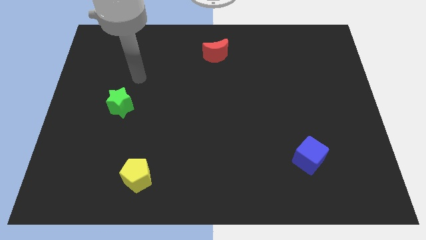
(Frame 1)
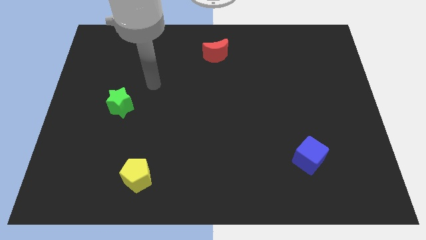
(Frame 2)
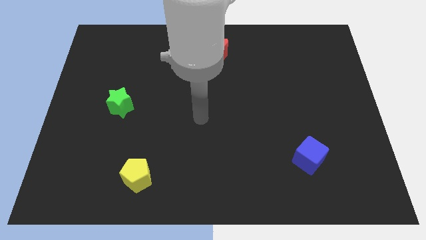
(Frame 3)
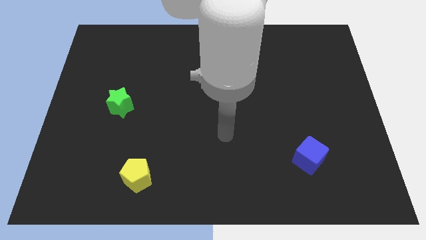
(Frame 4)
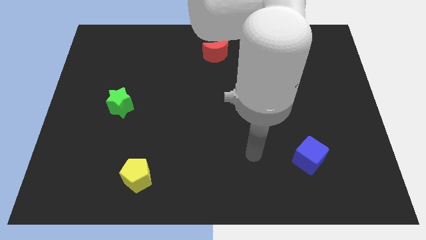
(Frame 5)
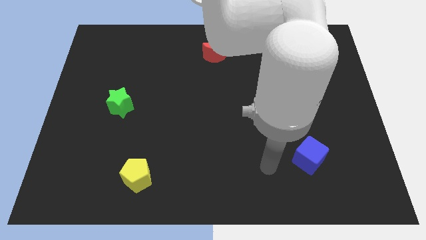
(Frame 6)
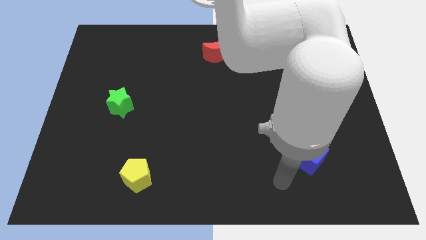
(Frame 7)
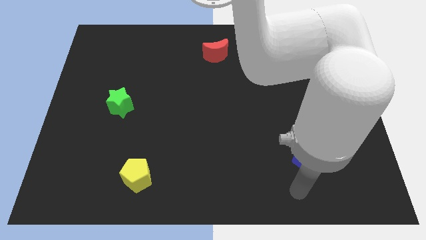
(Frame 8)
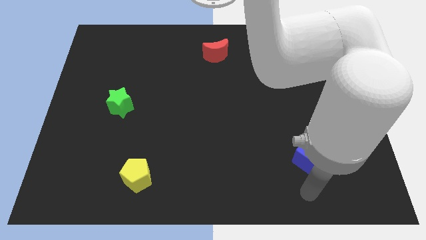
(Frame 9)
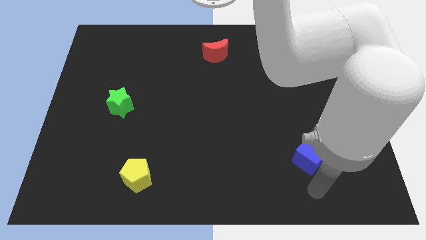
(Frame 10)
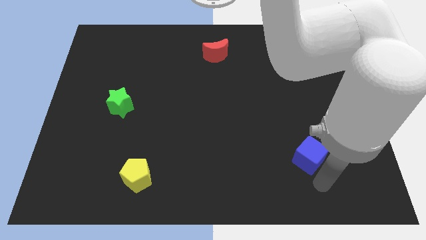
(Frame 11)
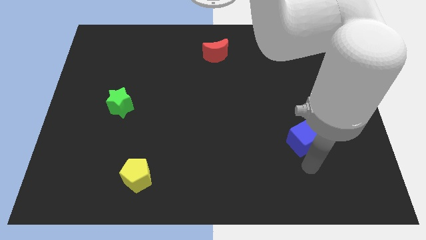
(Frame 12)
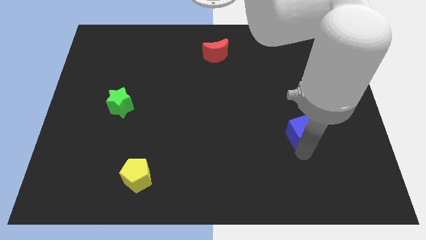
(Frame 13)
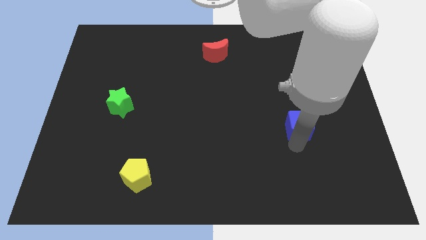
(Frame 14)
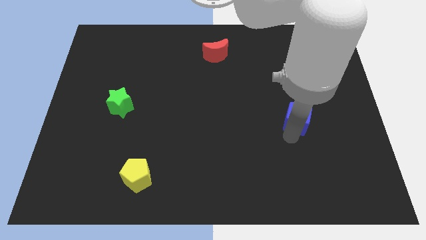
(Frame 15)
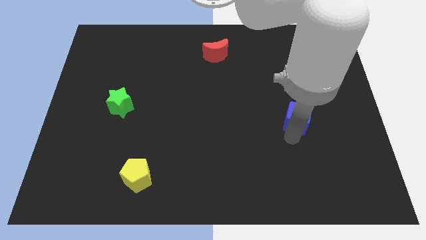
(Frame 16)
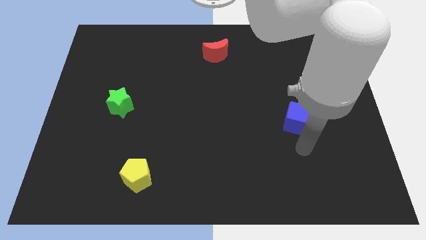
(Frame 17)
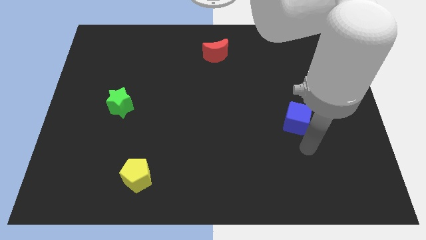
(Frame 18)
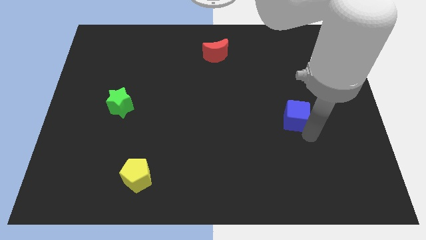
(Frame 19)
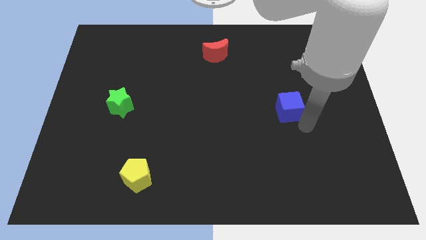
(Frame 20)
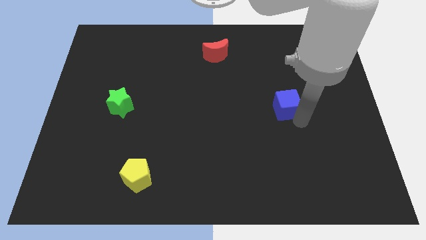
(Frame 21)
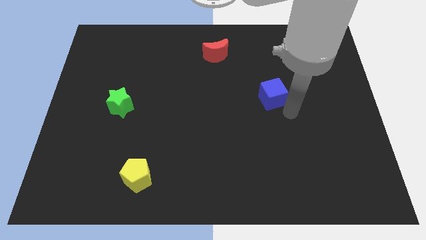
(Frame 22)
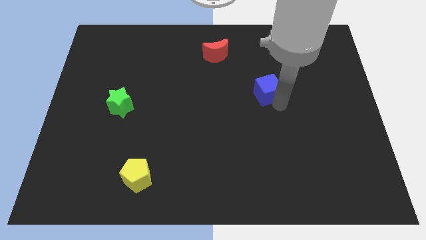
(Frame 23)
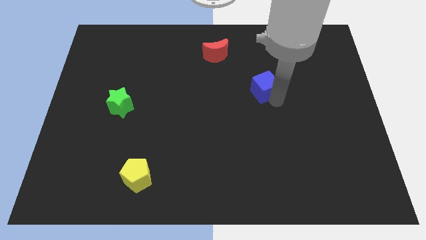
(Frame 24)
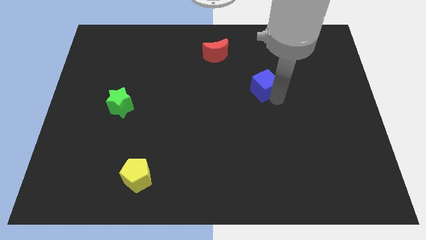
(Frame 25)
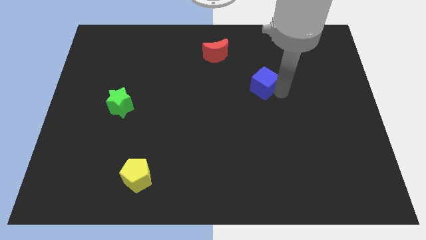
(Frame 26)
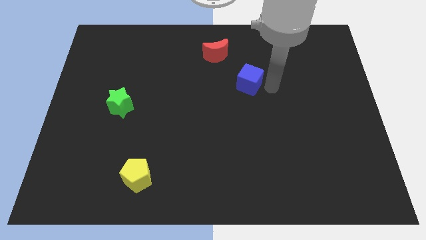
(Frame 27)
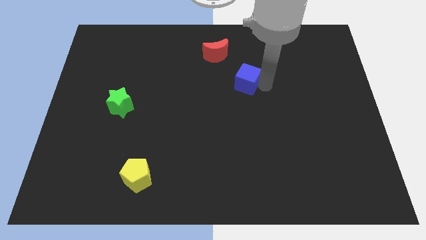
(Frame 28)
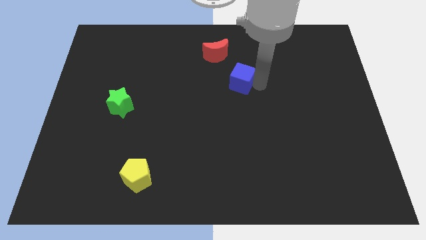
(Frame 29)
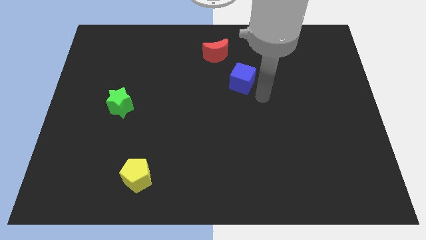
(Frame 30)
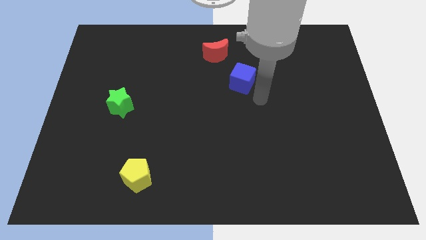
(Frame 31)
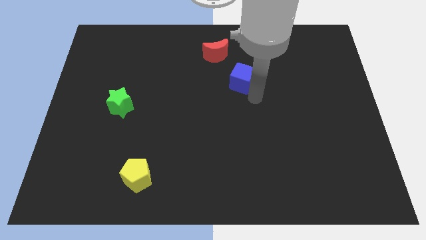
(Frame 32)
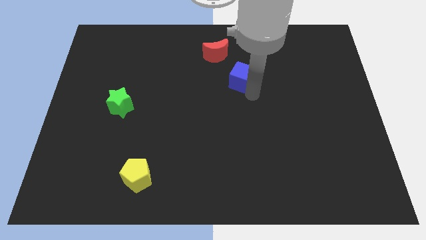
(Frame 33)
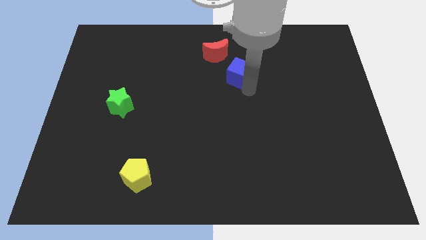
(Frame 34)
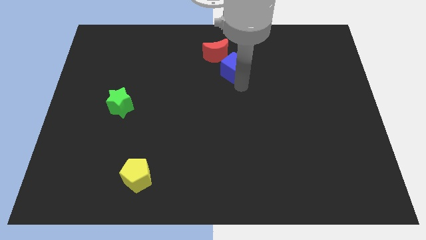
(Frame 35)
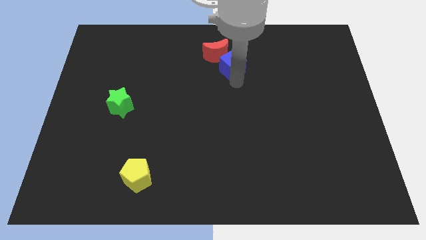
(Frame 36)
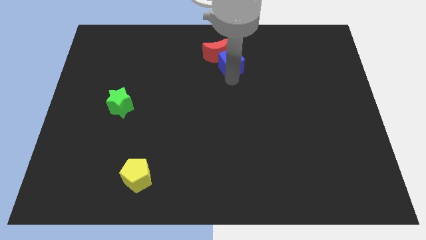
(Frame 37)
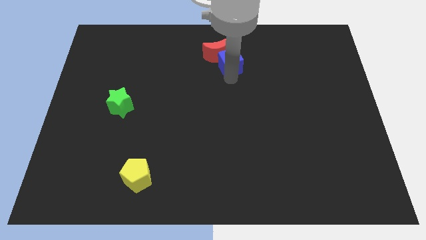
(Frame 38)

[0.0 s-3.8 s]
move the blue cube towards the red moon

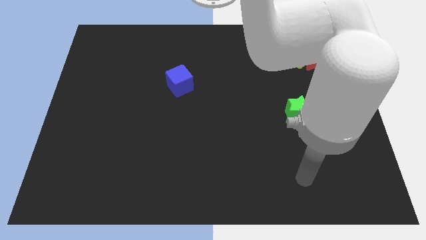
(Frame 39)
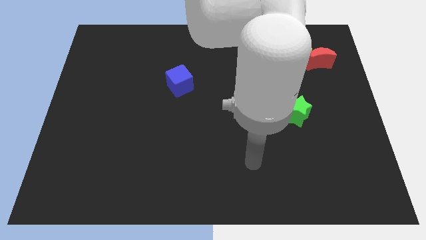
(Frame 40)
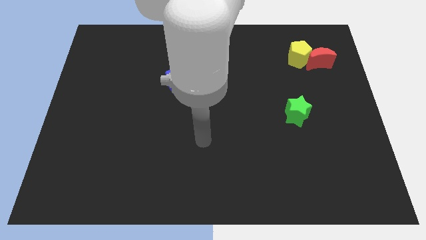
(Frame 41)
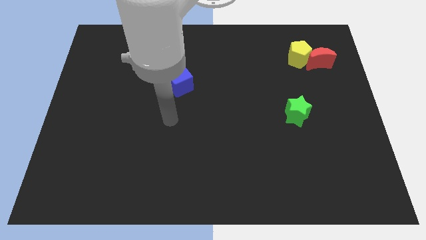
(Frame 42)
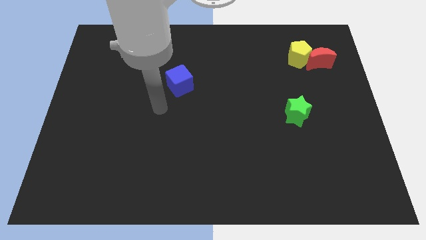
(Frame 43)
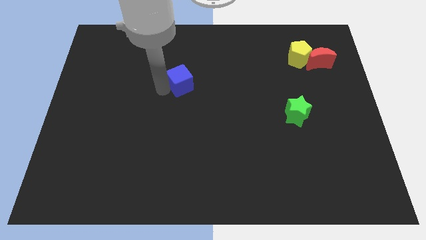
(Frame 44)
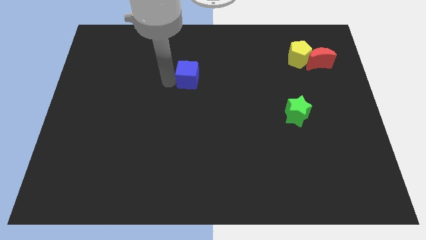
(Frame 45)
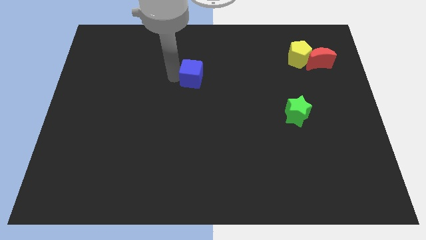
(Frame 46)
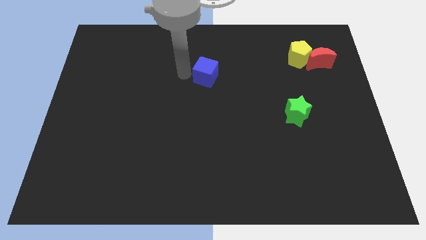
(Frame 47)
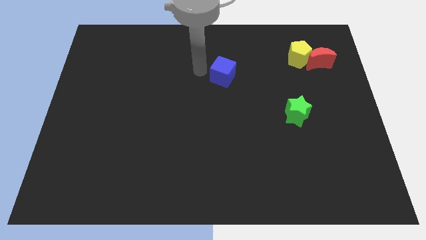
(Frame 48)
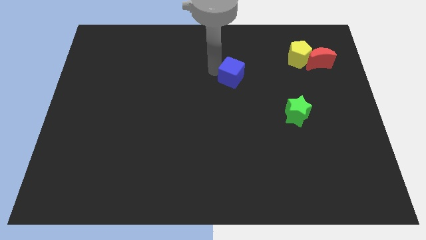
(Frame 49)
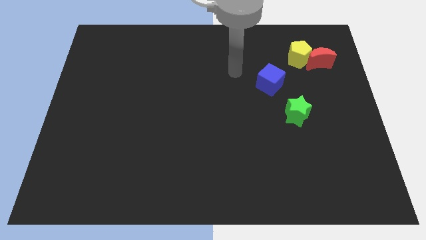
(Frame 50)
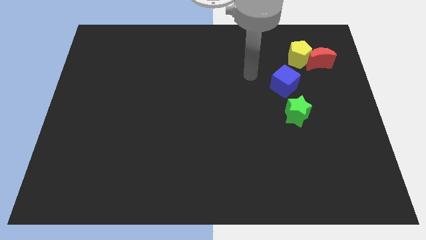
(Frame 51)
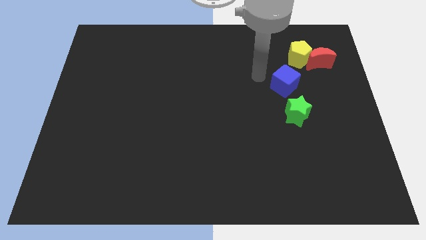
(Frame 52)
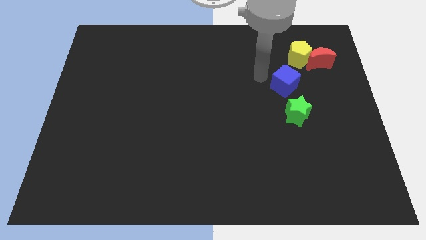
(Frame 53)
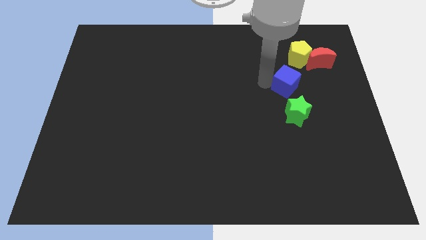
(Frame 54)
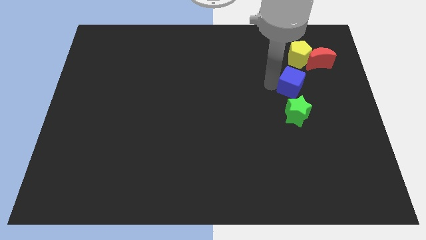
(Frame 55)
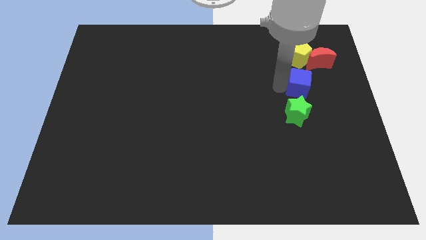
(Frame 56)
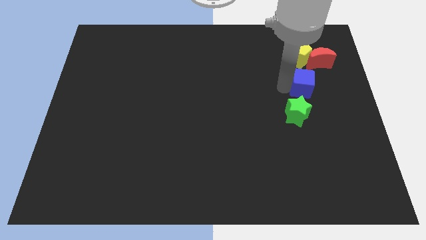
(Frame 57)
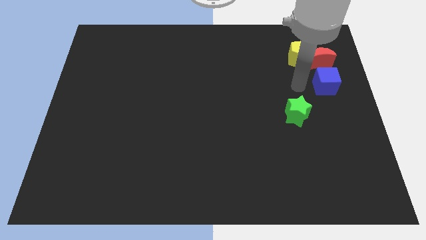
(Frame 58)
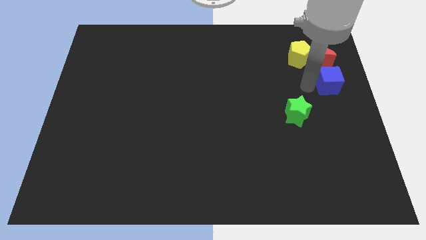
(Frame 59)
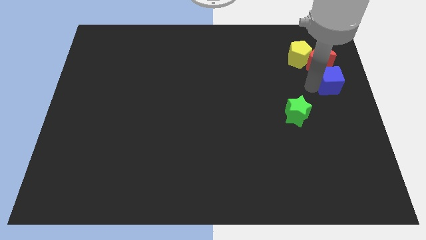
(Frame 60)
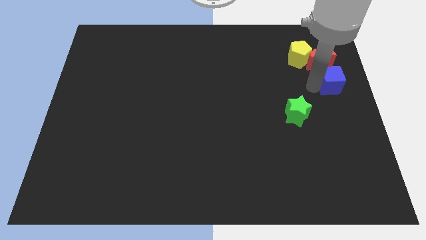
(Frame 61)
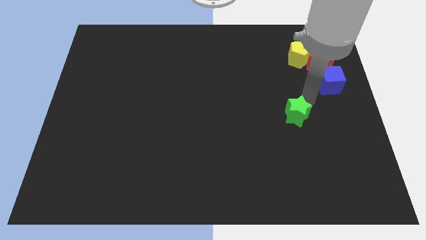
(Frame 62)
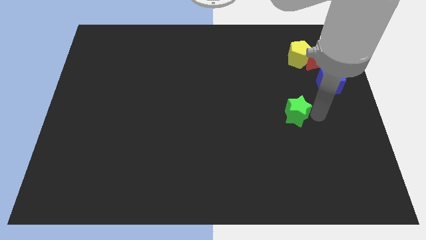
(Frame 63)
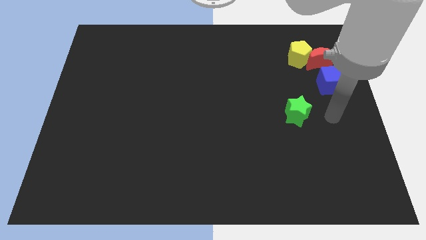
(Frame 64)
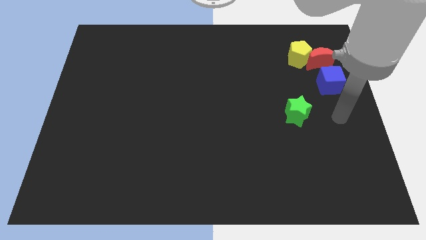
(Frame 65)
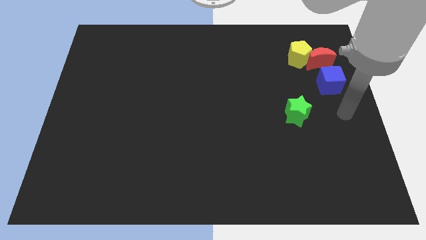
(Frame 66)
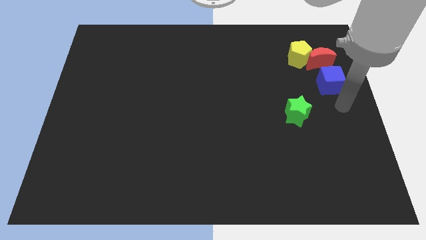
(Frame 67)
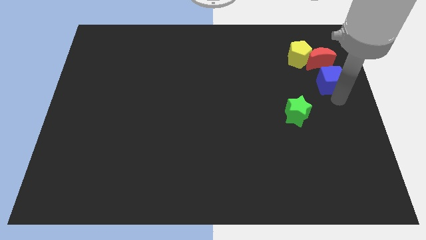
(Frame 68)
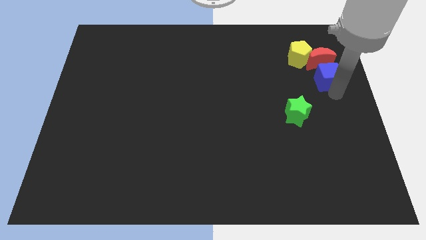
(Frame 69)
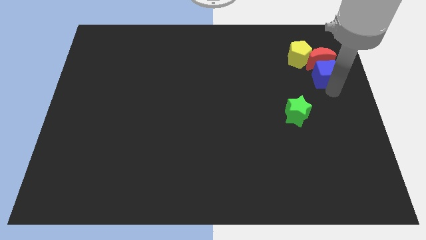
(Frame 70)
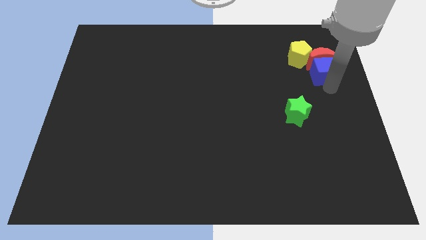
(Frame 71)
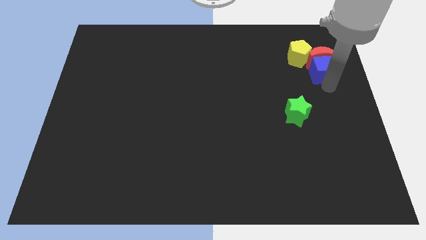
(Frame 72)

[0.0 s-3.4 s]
move the blue block close to the red moon

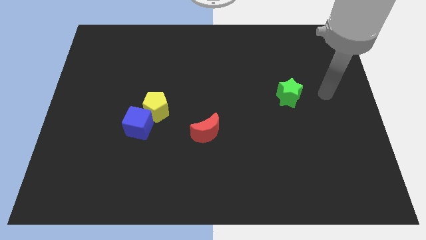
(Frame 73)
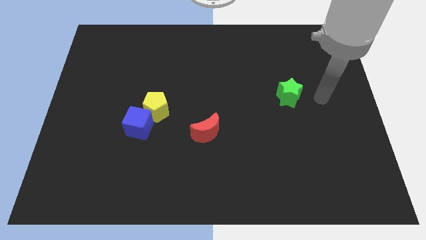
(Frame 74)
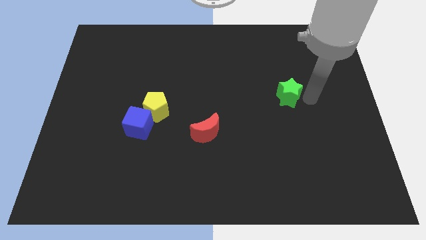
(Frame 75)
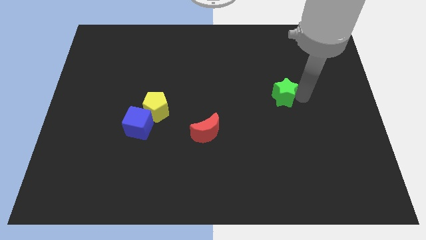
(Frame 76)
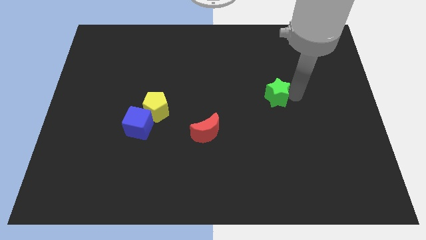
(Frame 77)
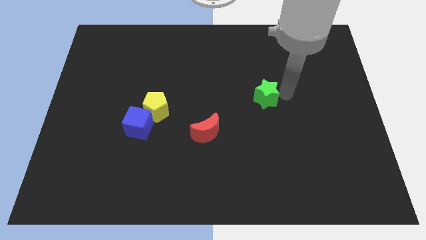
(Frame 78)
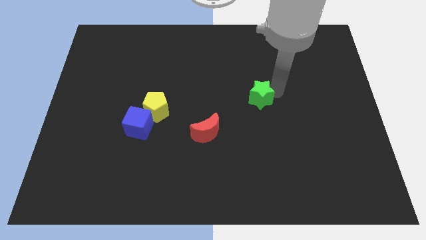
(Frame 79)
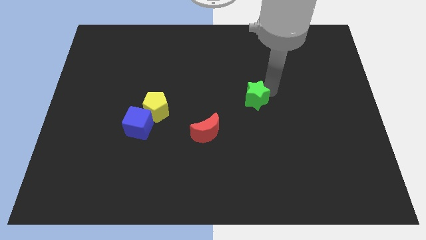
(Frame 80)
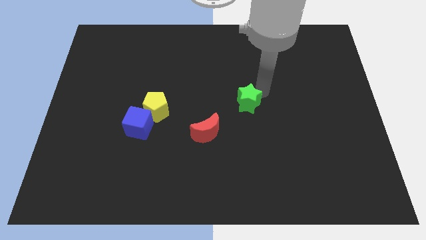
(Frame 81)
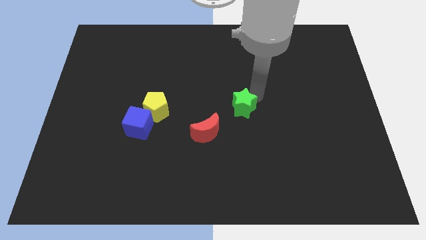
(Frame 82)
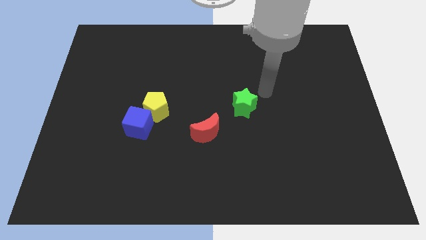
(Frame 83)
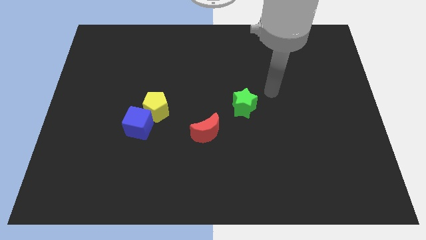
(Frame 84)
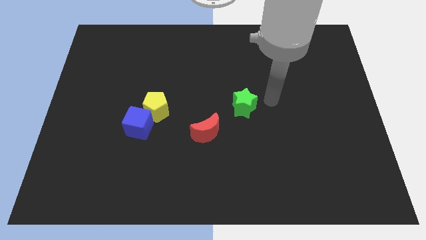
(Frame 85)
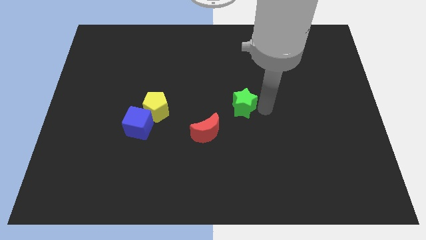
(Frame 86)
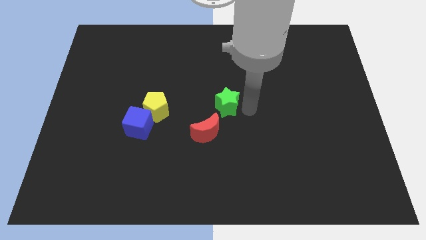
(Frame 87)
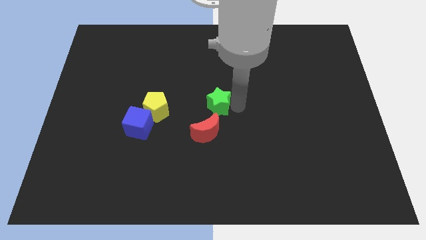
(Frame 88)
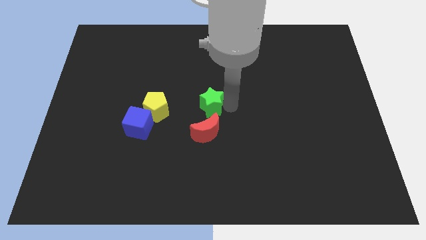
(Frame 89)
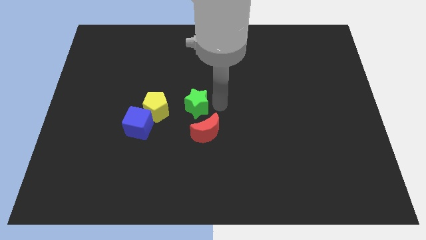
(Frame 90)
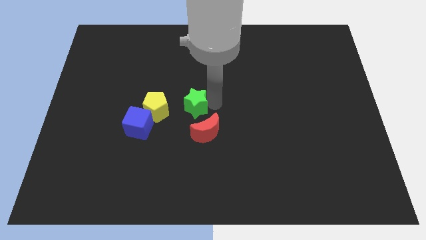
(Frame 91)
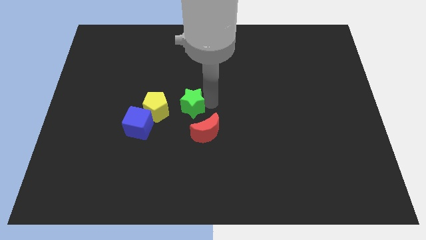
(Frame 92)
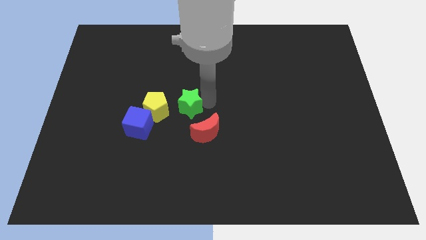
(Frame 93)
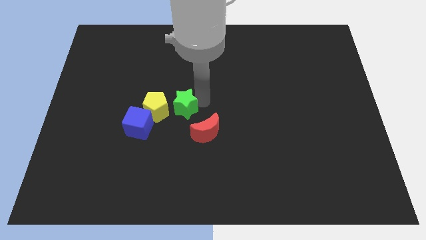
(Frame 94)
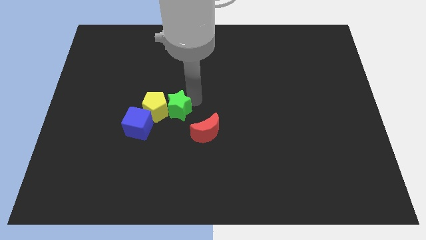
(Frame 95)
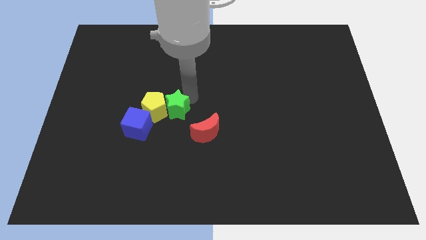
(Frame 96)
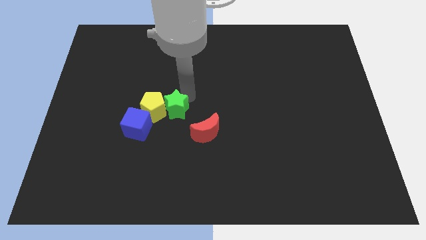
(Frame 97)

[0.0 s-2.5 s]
slide the star close to the pentagon
